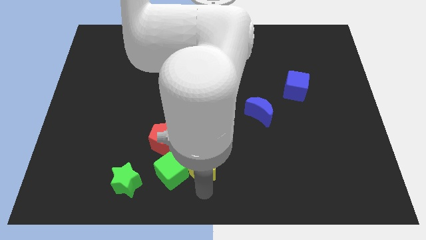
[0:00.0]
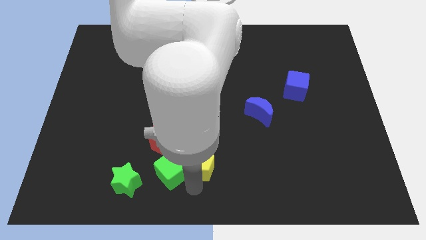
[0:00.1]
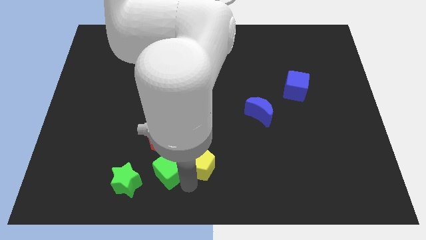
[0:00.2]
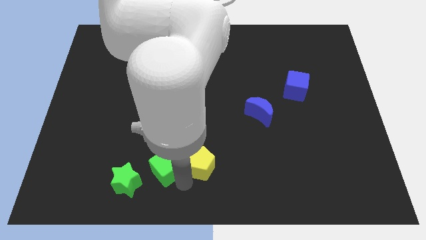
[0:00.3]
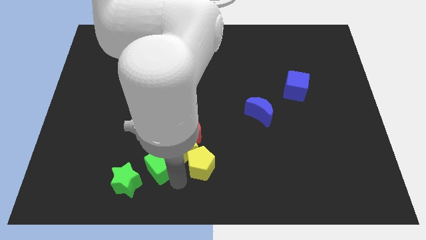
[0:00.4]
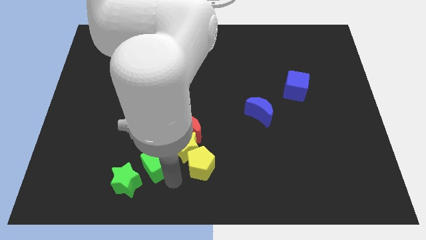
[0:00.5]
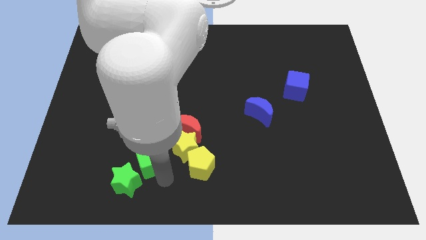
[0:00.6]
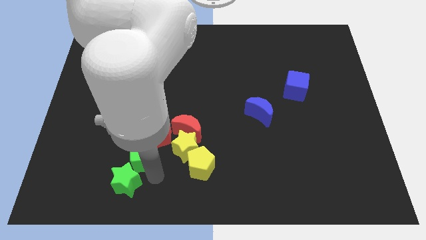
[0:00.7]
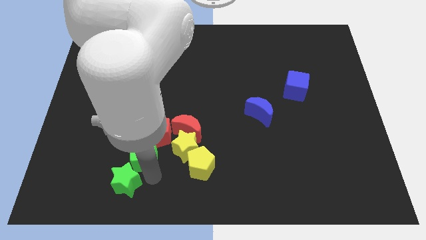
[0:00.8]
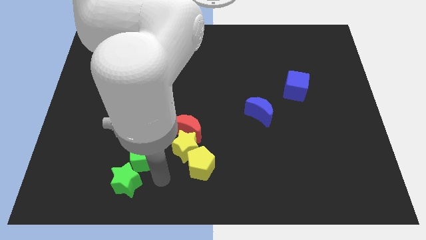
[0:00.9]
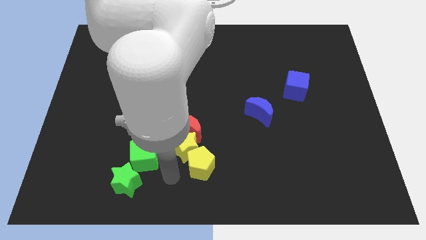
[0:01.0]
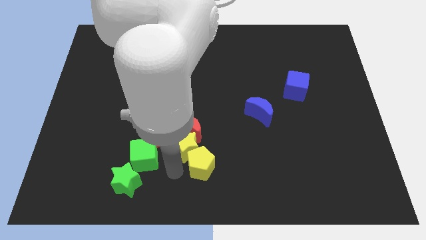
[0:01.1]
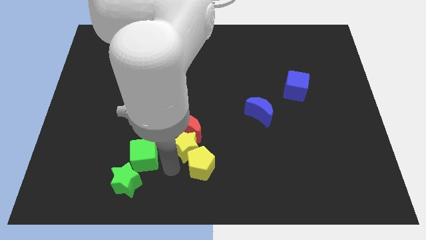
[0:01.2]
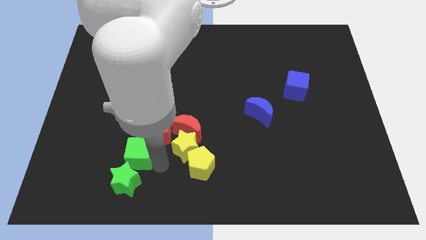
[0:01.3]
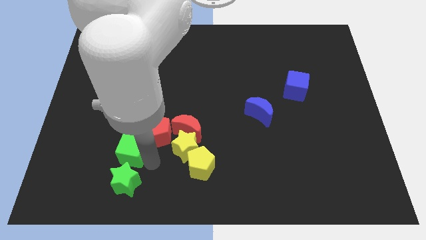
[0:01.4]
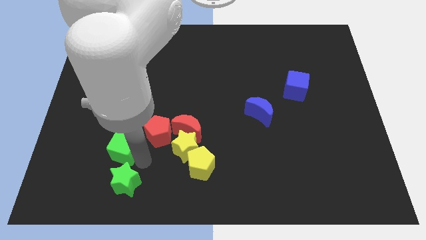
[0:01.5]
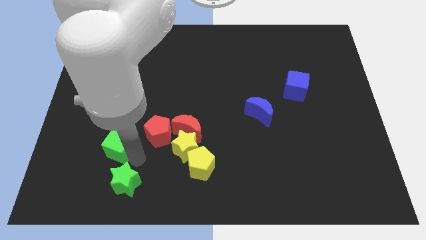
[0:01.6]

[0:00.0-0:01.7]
separate the green cube from the yellow pentagon

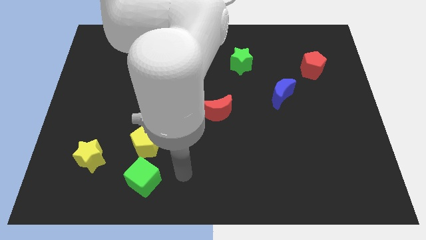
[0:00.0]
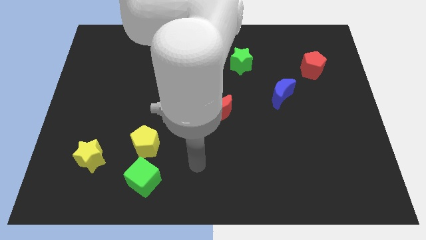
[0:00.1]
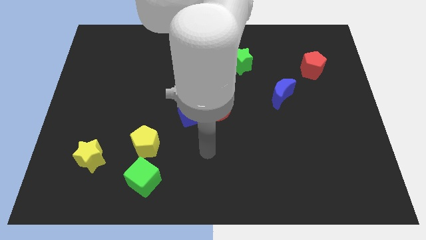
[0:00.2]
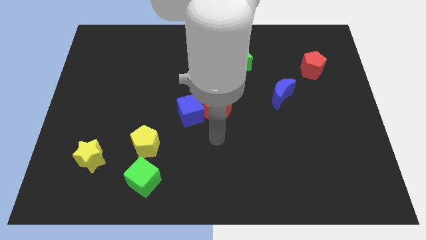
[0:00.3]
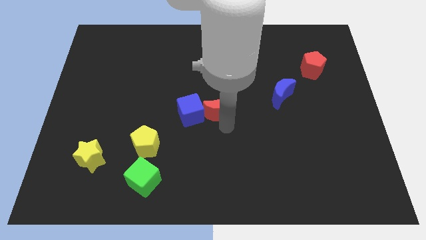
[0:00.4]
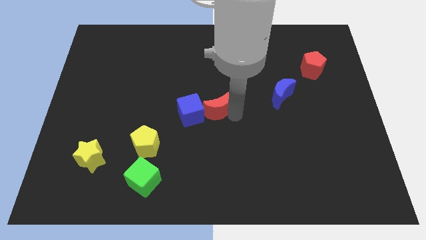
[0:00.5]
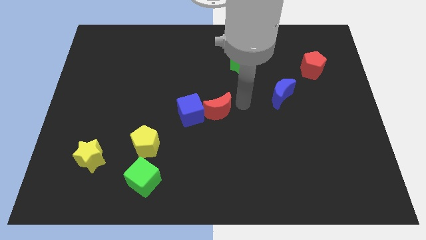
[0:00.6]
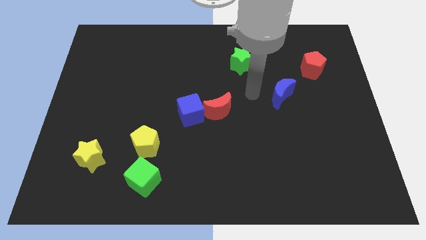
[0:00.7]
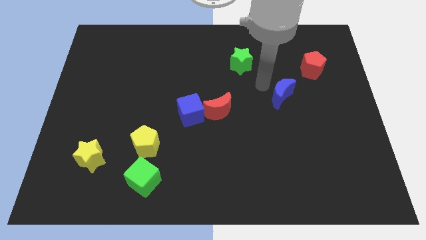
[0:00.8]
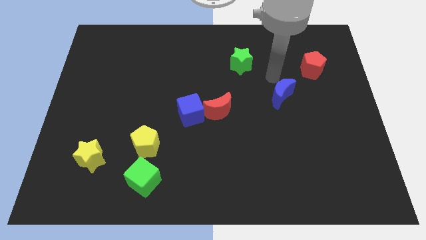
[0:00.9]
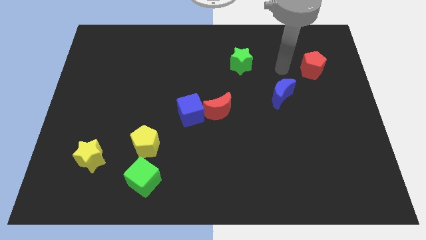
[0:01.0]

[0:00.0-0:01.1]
place your arm in between the green star and red pentagon

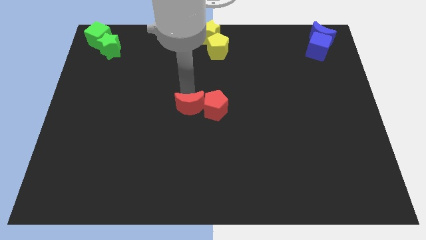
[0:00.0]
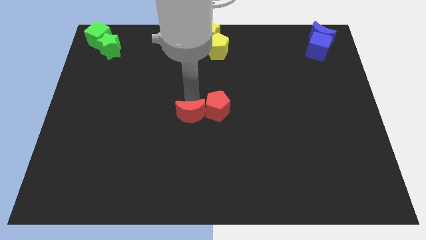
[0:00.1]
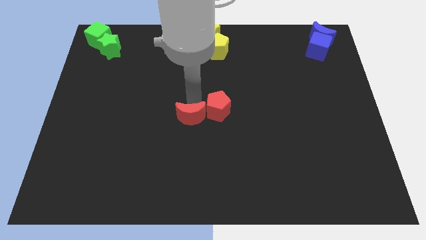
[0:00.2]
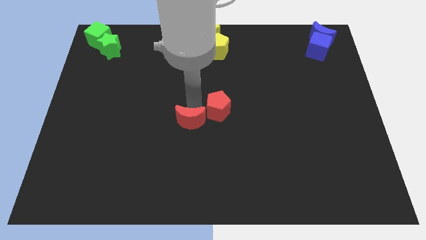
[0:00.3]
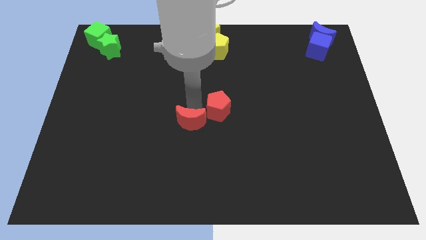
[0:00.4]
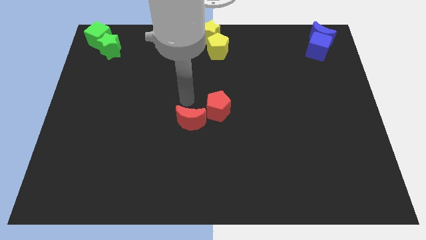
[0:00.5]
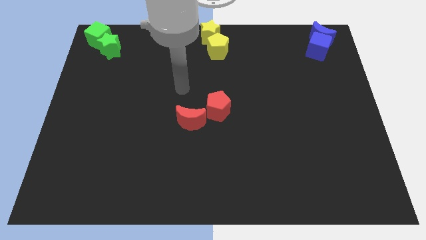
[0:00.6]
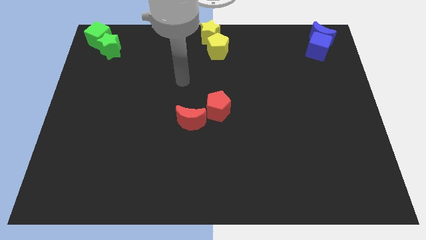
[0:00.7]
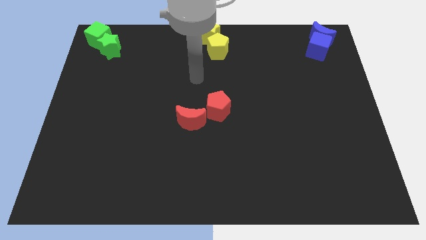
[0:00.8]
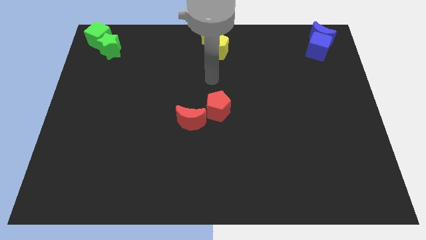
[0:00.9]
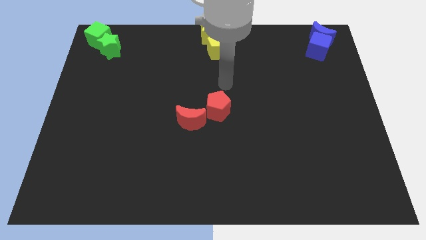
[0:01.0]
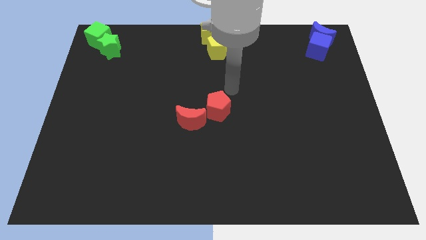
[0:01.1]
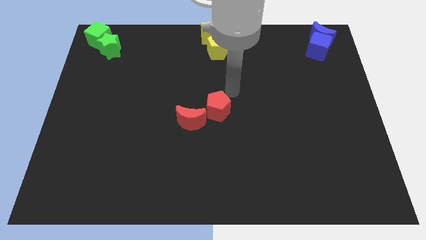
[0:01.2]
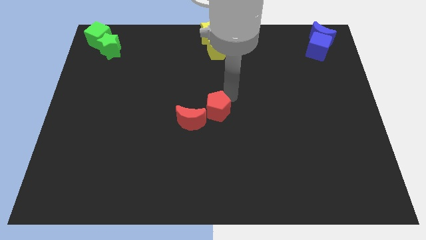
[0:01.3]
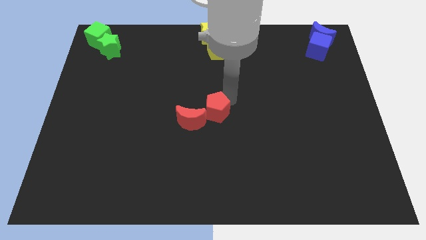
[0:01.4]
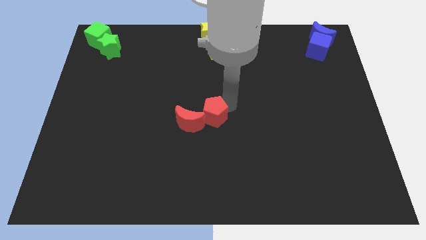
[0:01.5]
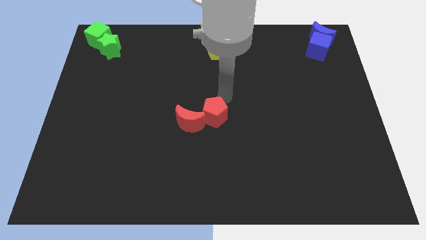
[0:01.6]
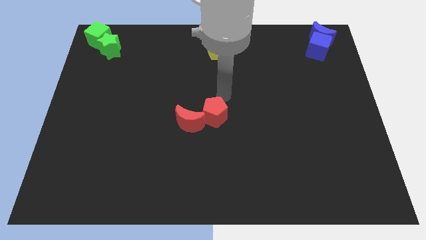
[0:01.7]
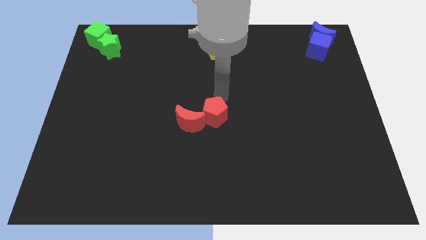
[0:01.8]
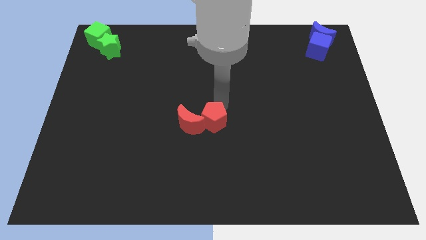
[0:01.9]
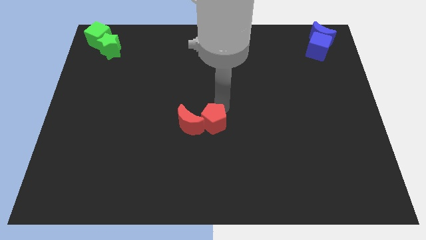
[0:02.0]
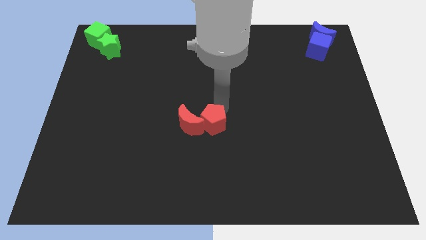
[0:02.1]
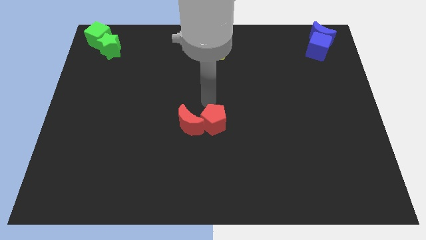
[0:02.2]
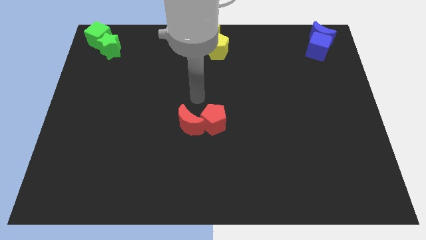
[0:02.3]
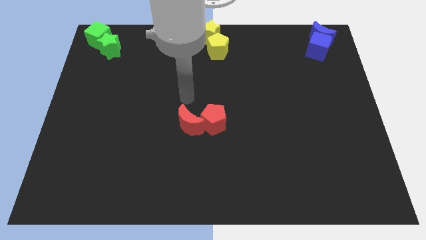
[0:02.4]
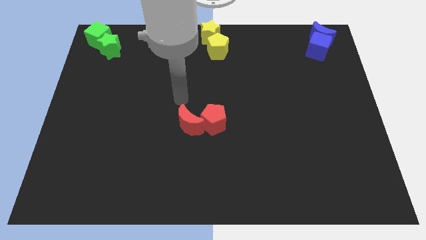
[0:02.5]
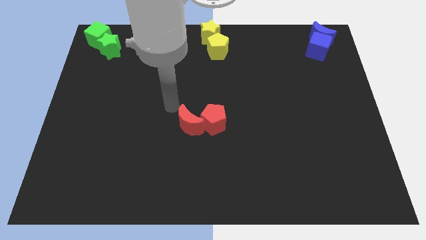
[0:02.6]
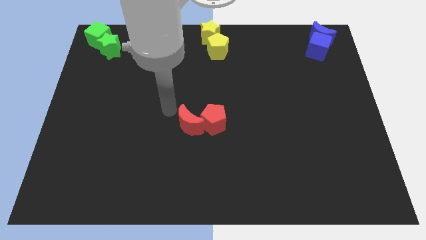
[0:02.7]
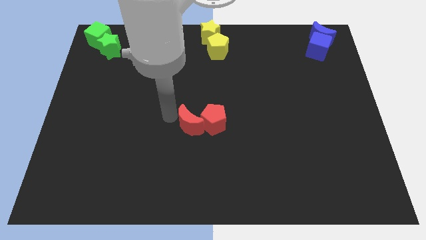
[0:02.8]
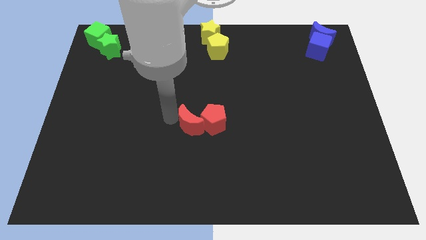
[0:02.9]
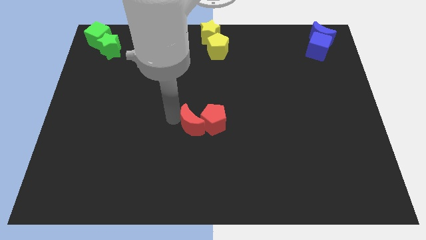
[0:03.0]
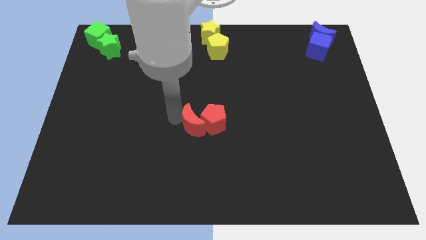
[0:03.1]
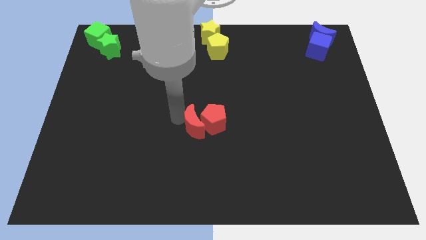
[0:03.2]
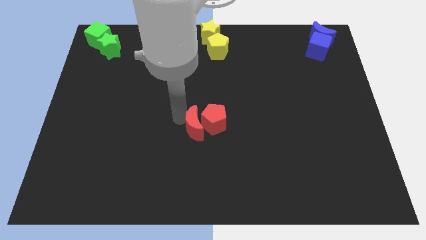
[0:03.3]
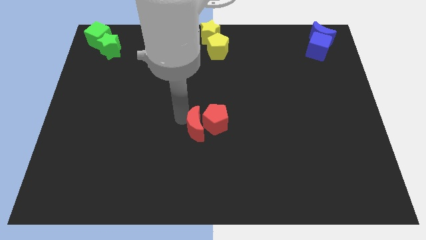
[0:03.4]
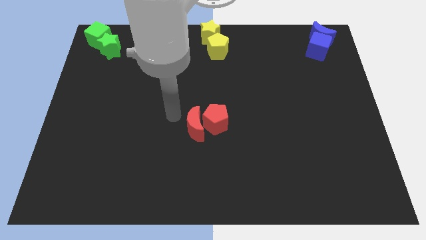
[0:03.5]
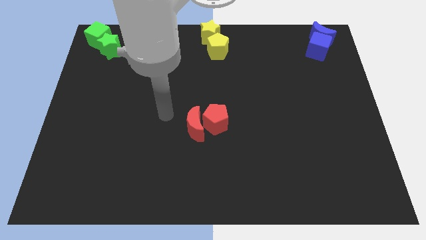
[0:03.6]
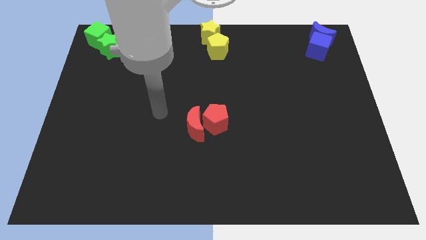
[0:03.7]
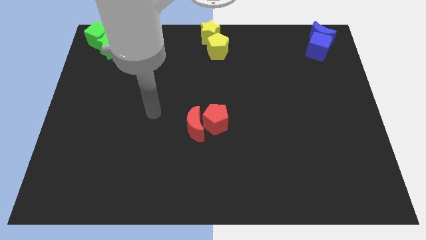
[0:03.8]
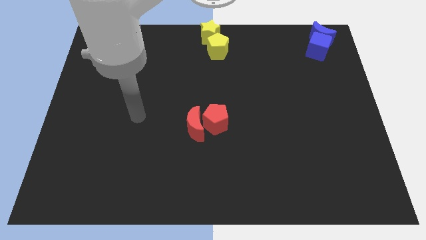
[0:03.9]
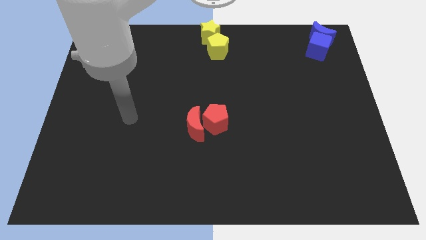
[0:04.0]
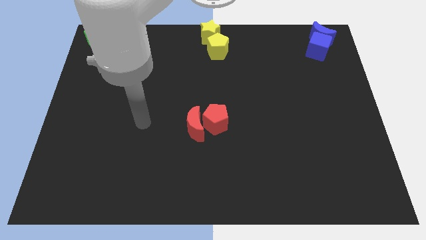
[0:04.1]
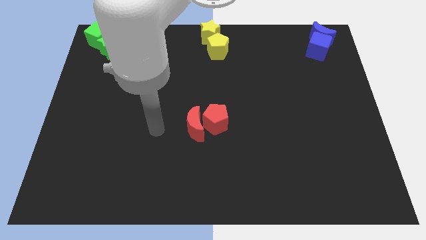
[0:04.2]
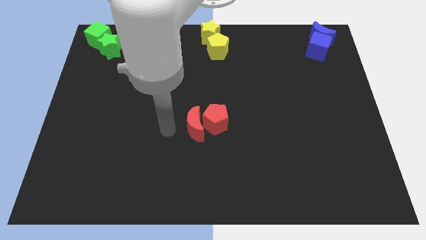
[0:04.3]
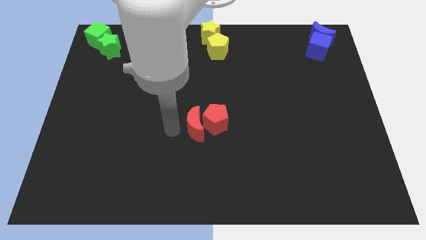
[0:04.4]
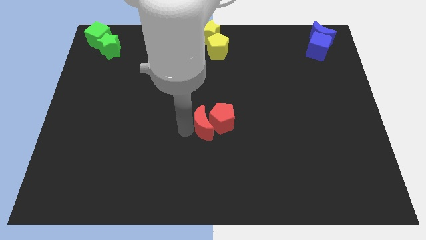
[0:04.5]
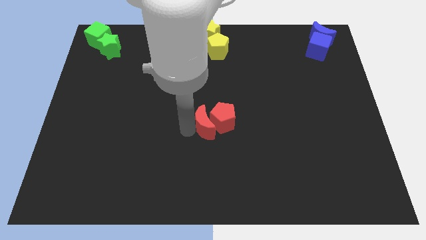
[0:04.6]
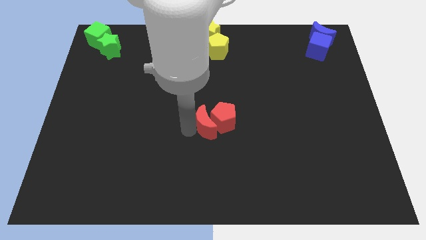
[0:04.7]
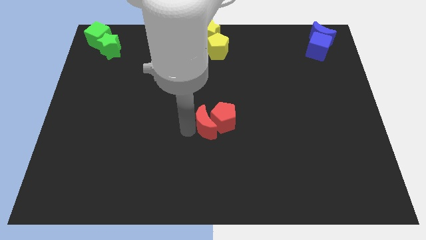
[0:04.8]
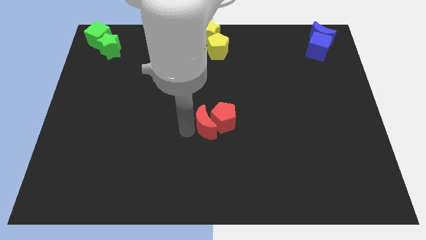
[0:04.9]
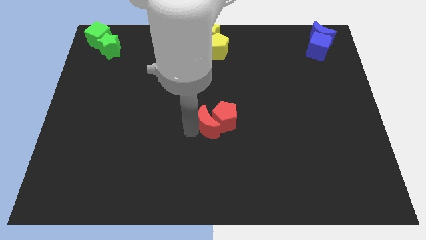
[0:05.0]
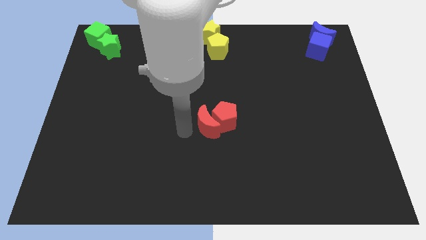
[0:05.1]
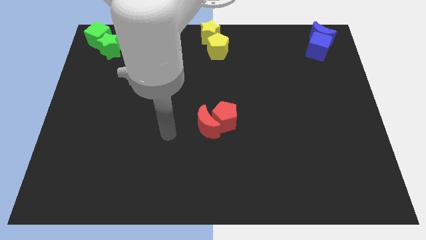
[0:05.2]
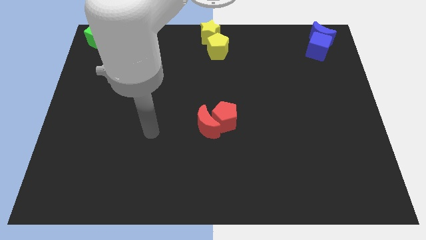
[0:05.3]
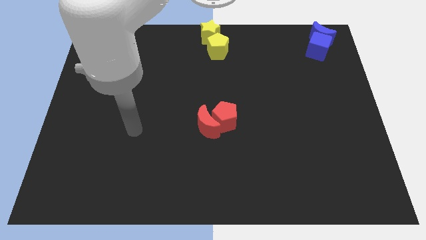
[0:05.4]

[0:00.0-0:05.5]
move the group of red blocks slightly to the bottom

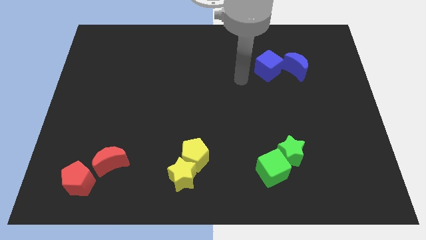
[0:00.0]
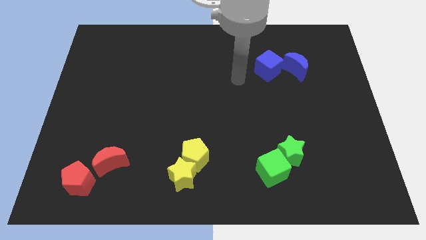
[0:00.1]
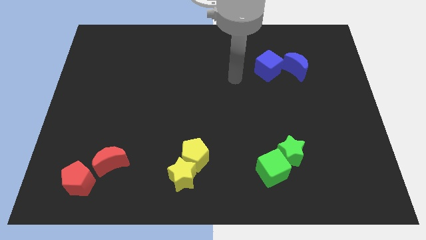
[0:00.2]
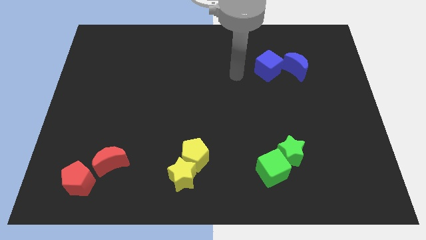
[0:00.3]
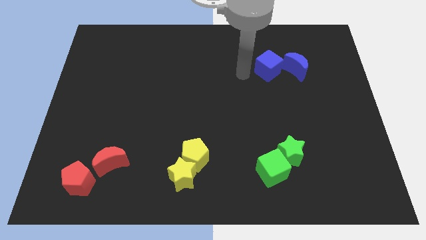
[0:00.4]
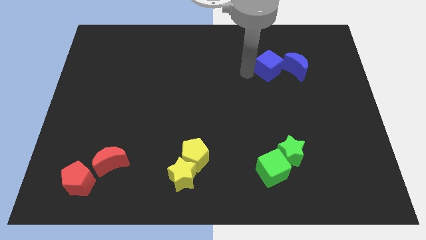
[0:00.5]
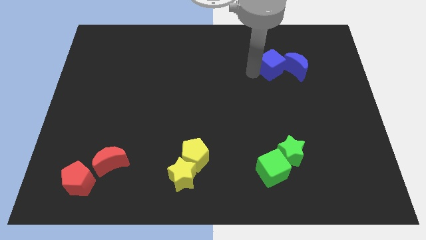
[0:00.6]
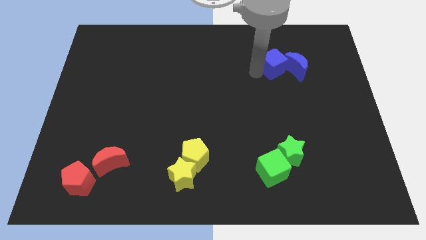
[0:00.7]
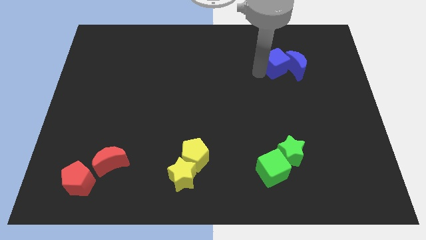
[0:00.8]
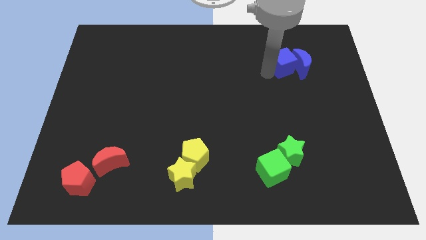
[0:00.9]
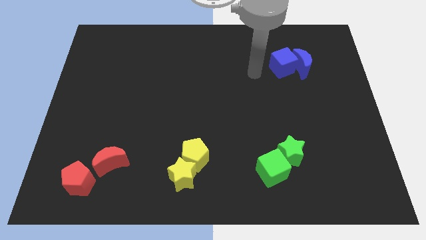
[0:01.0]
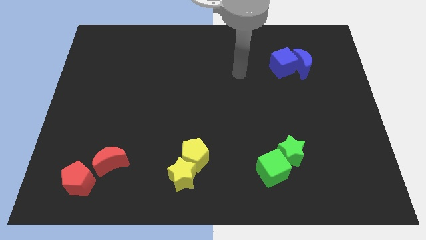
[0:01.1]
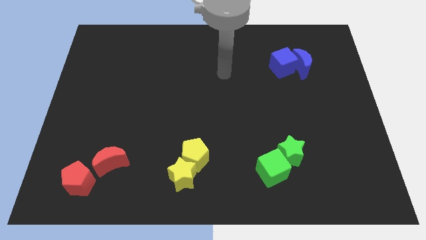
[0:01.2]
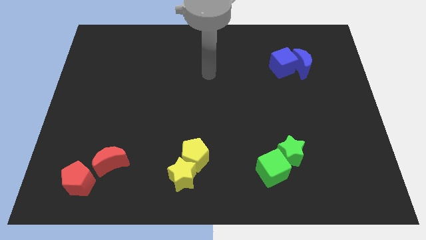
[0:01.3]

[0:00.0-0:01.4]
push blue cube into blue crescent
